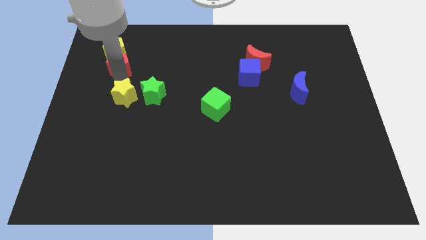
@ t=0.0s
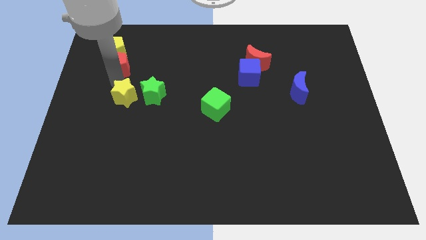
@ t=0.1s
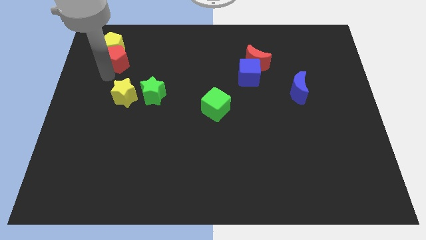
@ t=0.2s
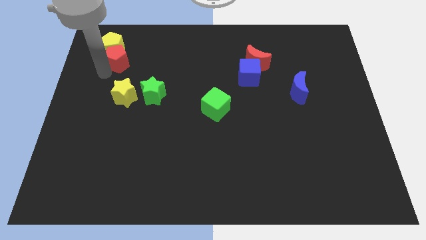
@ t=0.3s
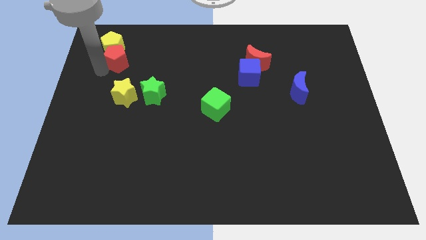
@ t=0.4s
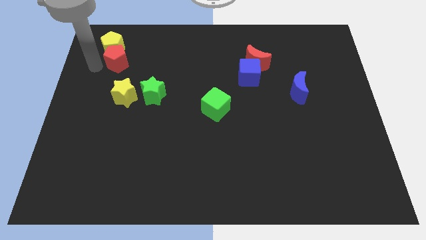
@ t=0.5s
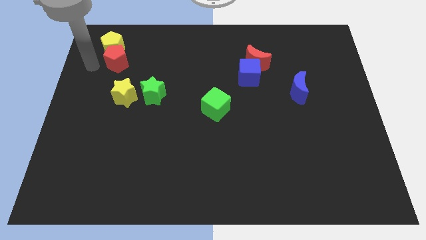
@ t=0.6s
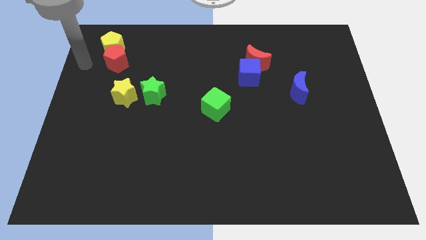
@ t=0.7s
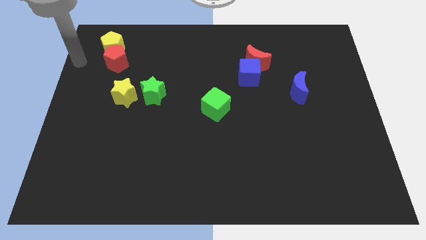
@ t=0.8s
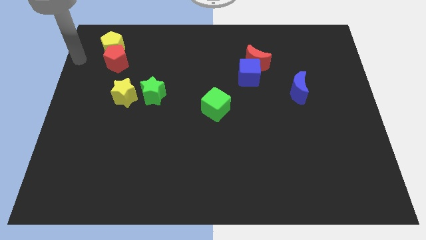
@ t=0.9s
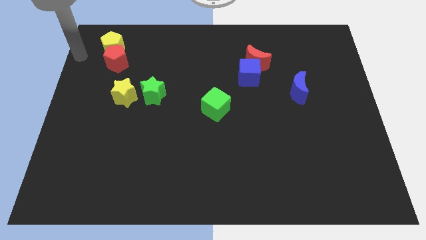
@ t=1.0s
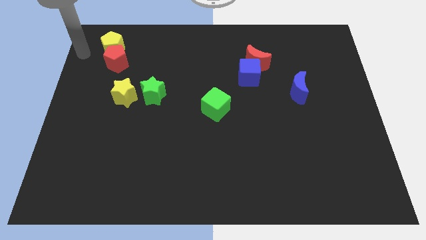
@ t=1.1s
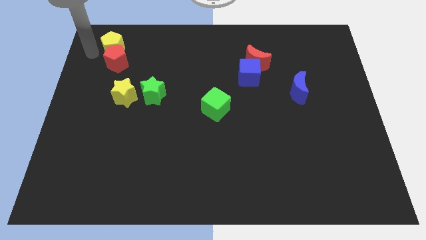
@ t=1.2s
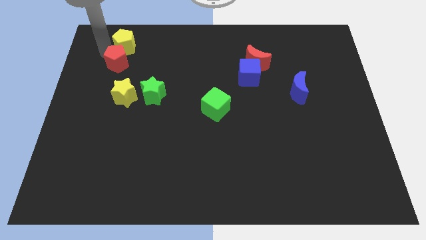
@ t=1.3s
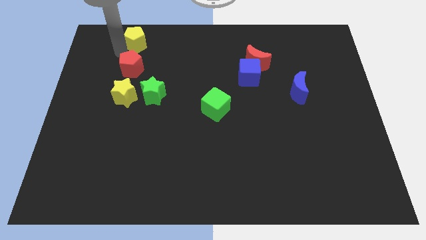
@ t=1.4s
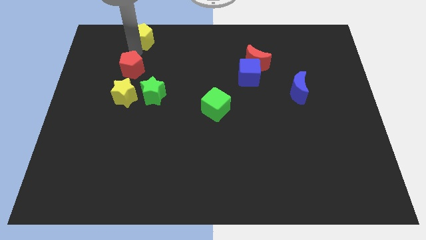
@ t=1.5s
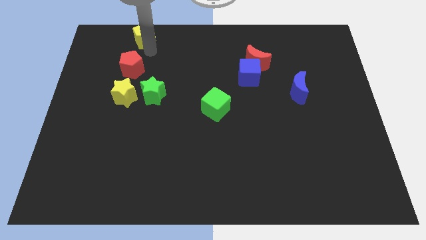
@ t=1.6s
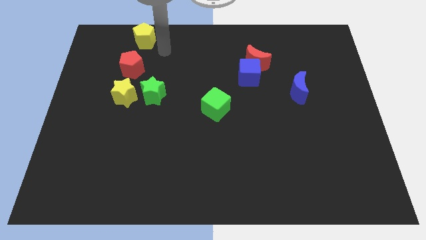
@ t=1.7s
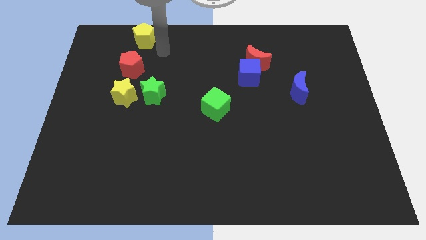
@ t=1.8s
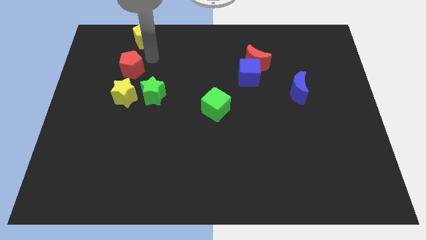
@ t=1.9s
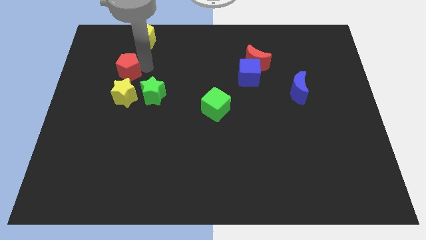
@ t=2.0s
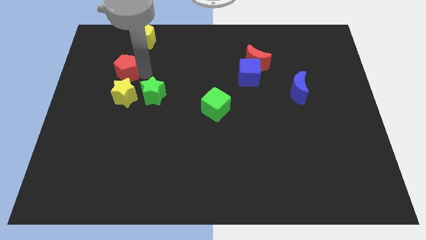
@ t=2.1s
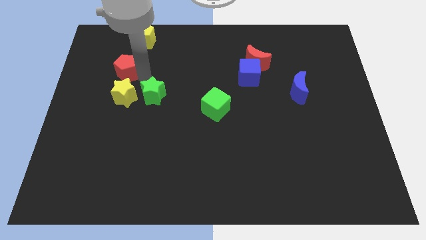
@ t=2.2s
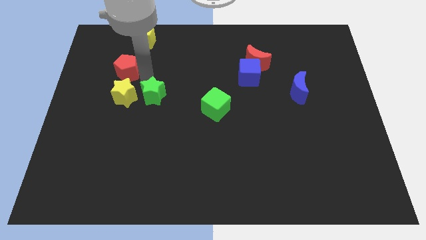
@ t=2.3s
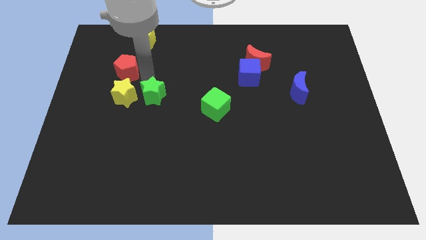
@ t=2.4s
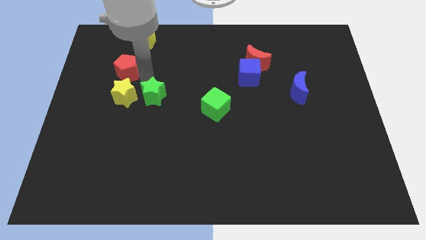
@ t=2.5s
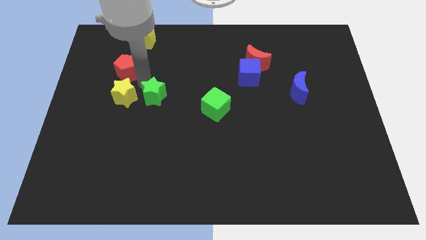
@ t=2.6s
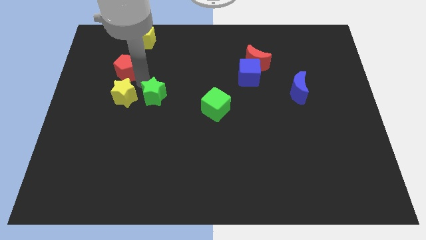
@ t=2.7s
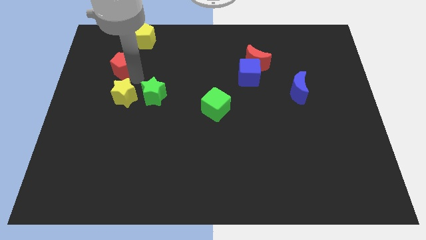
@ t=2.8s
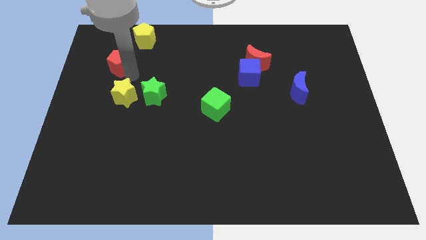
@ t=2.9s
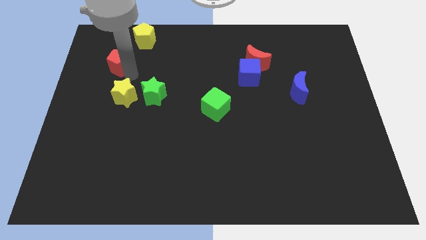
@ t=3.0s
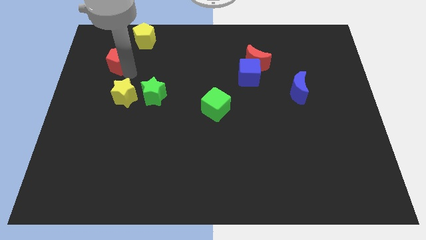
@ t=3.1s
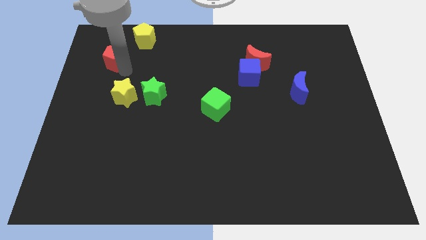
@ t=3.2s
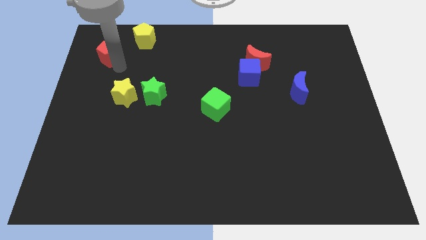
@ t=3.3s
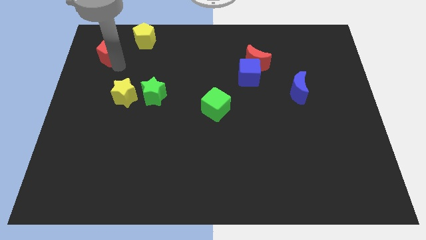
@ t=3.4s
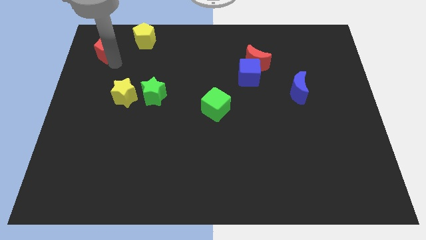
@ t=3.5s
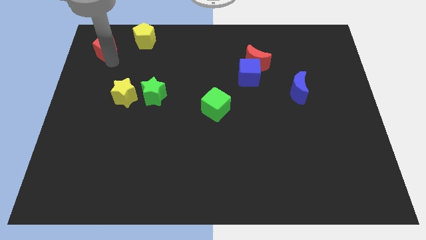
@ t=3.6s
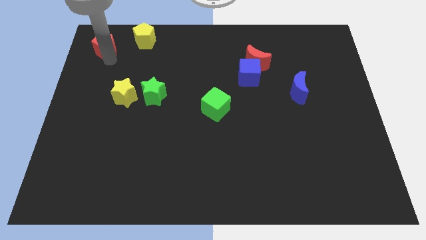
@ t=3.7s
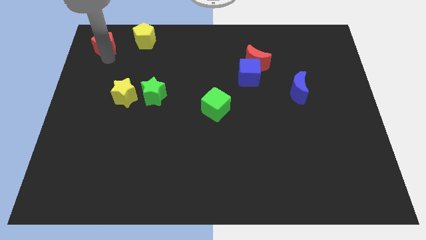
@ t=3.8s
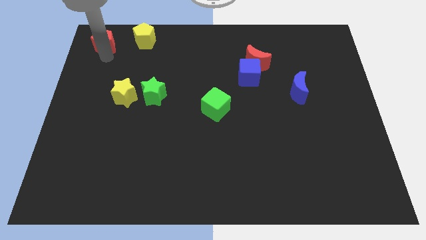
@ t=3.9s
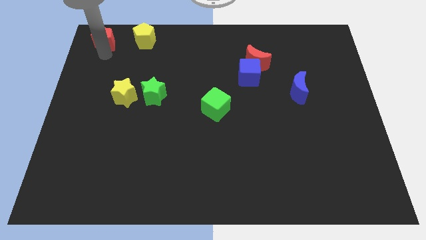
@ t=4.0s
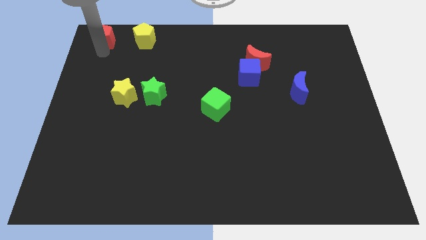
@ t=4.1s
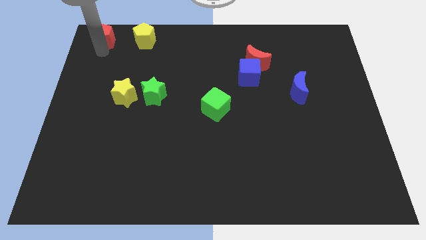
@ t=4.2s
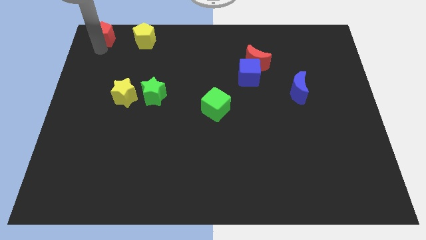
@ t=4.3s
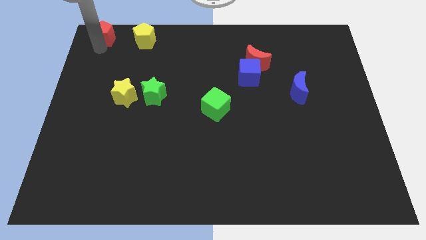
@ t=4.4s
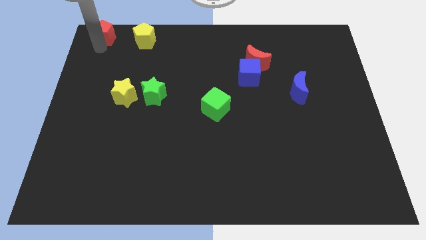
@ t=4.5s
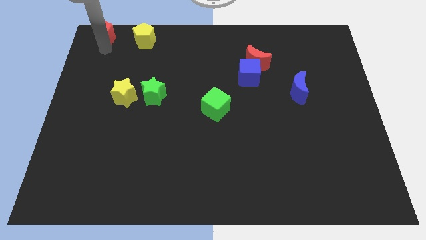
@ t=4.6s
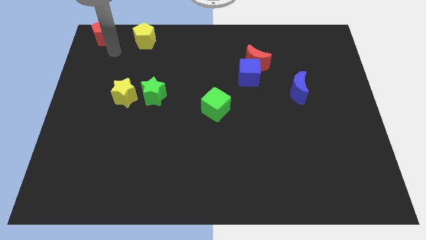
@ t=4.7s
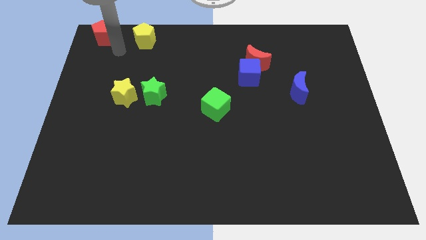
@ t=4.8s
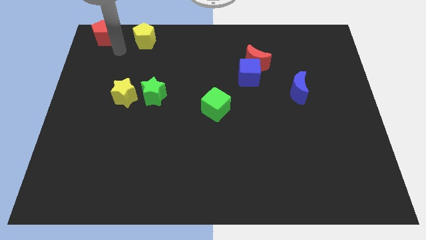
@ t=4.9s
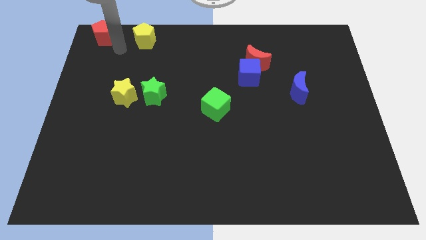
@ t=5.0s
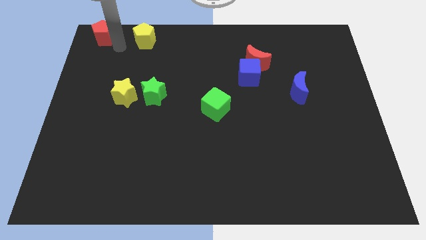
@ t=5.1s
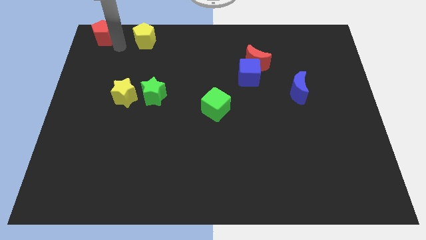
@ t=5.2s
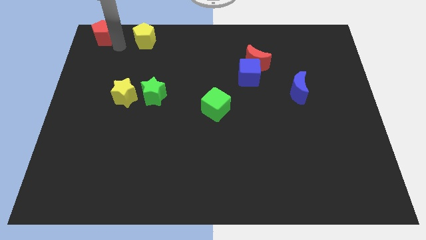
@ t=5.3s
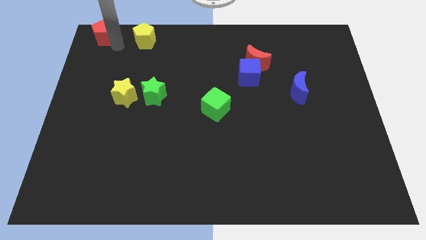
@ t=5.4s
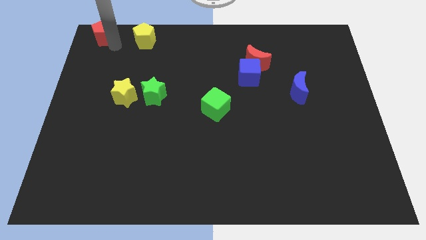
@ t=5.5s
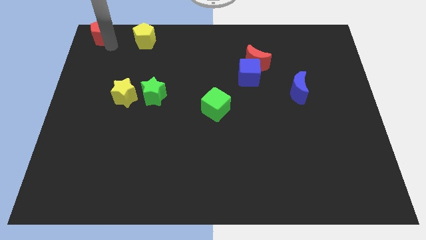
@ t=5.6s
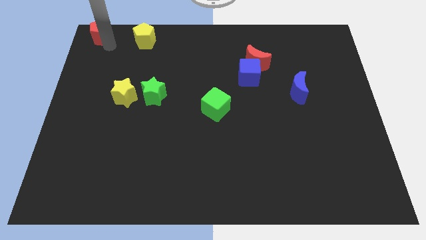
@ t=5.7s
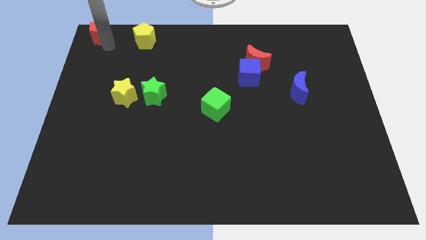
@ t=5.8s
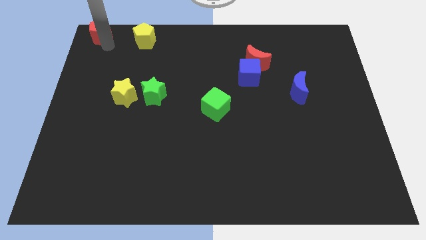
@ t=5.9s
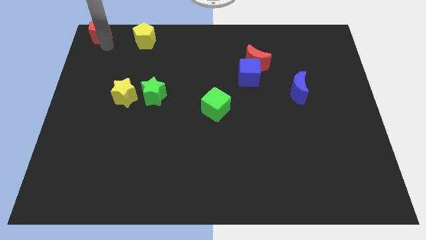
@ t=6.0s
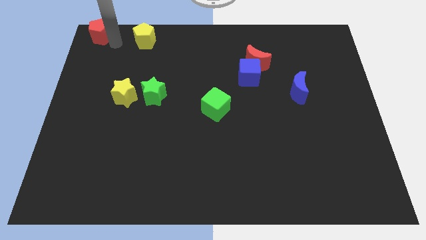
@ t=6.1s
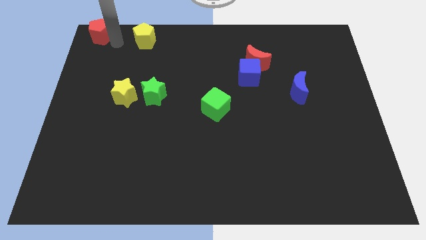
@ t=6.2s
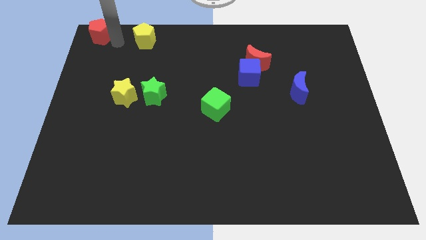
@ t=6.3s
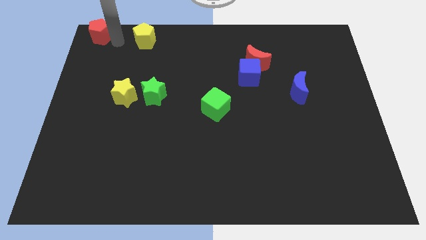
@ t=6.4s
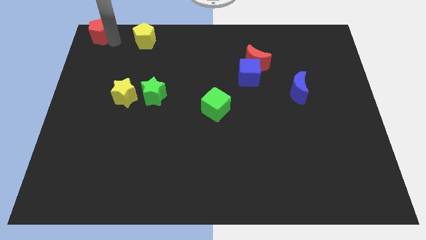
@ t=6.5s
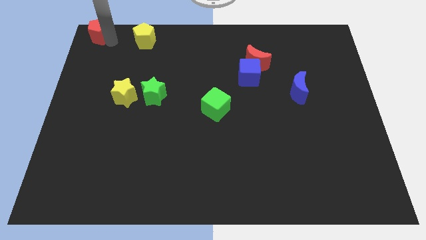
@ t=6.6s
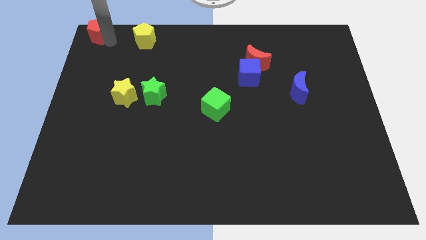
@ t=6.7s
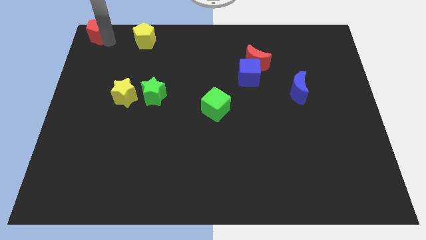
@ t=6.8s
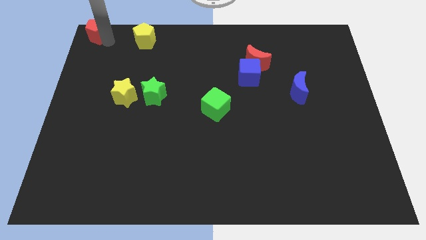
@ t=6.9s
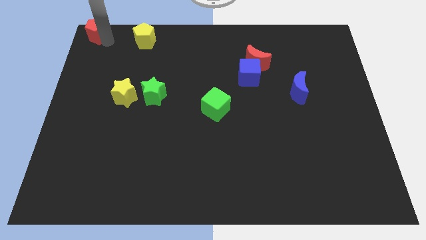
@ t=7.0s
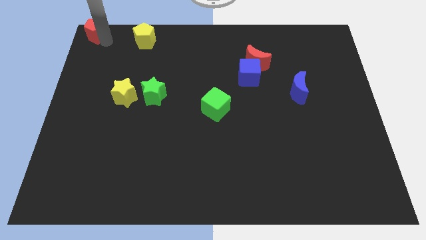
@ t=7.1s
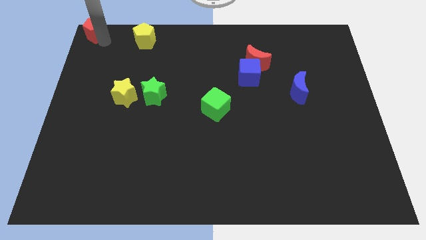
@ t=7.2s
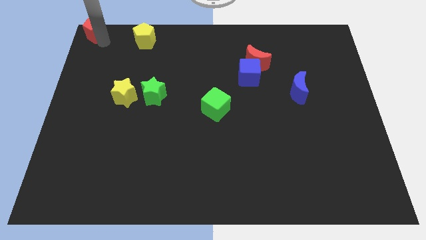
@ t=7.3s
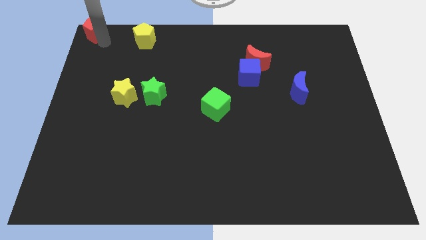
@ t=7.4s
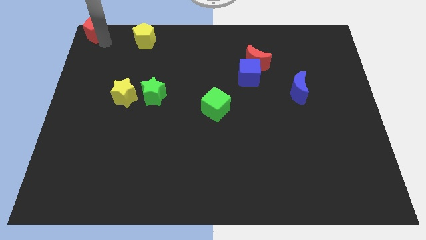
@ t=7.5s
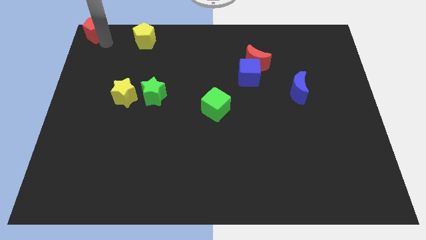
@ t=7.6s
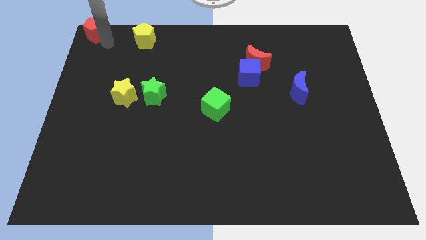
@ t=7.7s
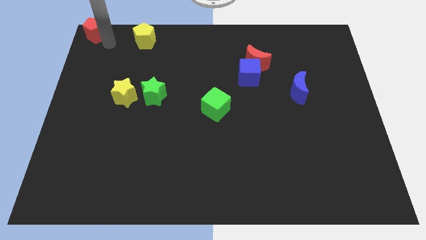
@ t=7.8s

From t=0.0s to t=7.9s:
push the red pentagon to the top left corner

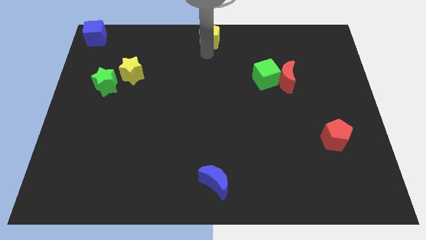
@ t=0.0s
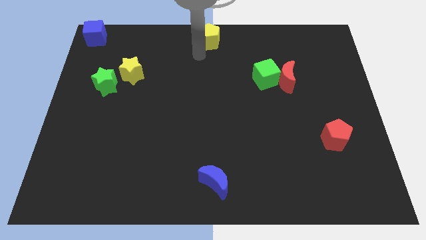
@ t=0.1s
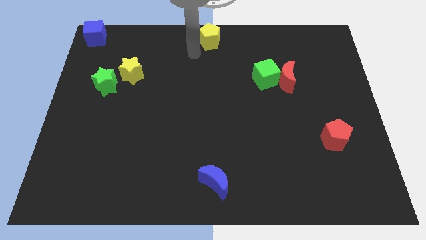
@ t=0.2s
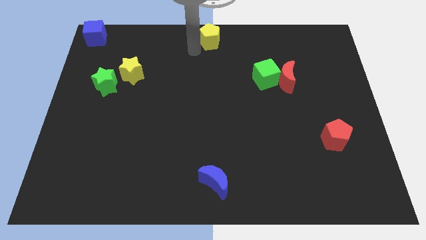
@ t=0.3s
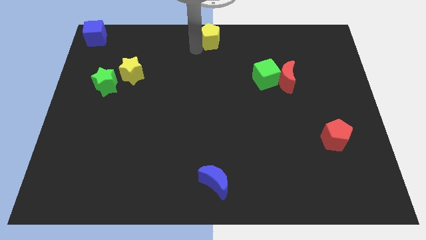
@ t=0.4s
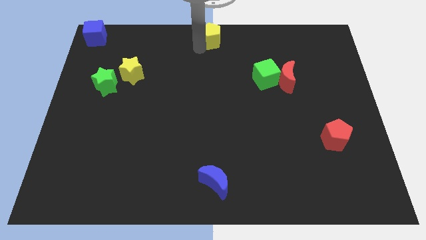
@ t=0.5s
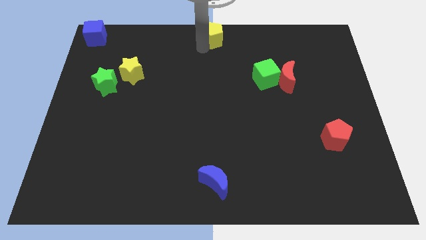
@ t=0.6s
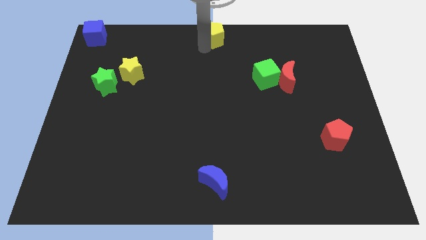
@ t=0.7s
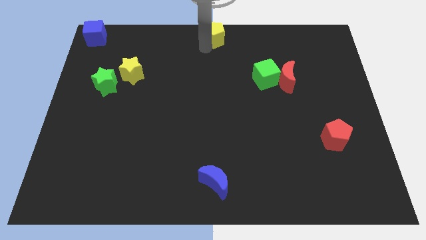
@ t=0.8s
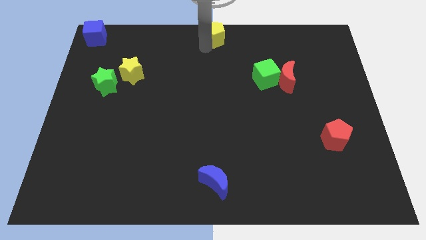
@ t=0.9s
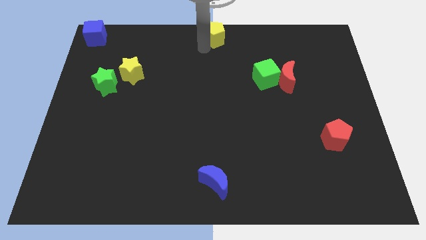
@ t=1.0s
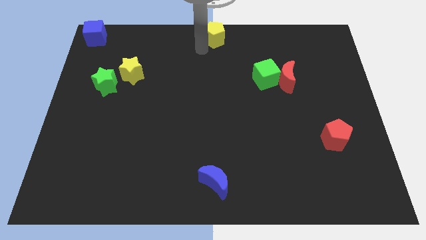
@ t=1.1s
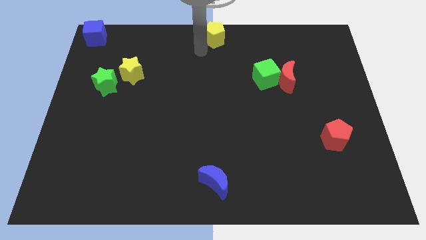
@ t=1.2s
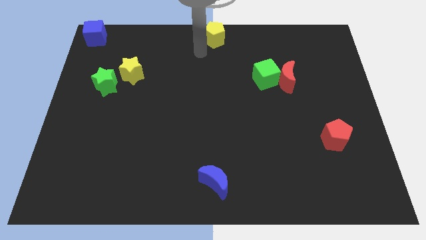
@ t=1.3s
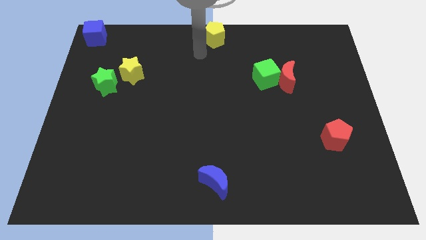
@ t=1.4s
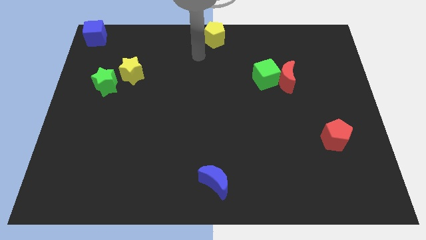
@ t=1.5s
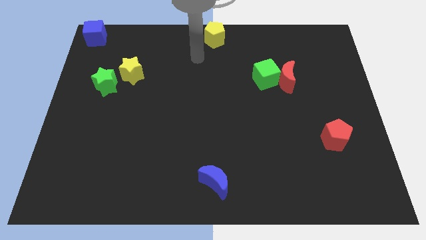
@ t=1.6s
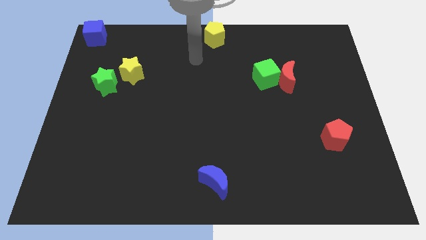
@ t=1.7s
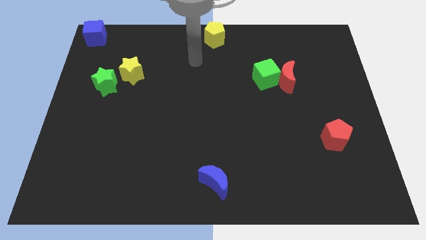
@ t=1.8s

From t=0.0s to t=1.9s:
push the yellow pentagon to the top center of the board
